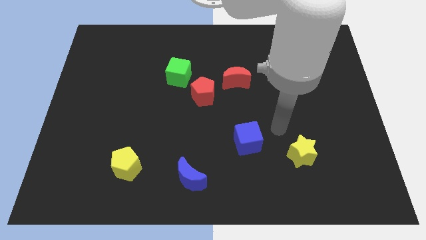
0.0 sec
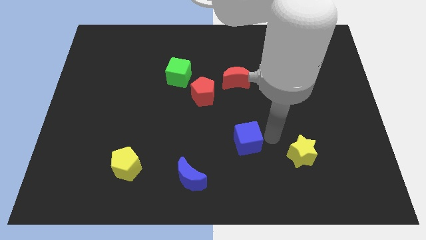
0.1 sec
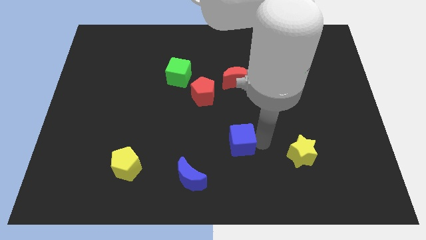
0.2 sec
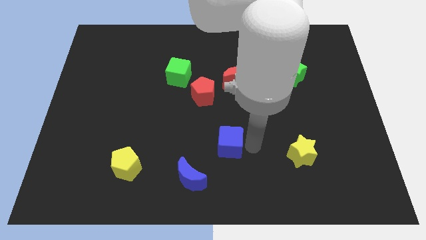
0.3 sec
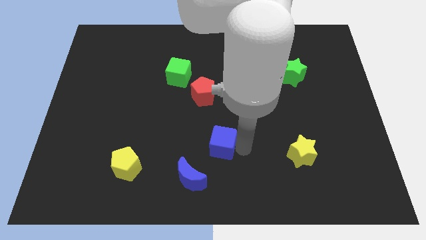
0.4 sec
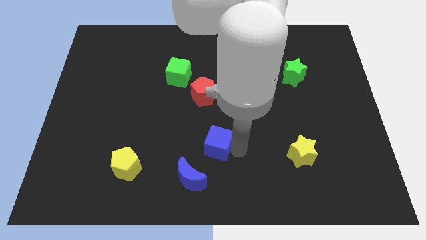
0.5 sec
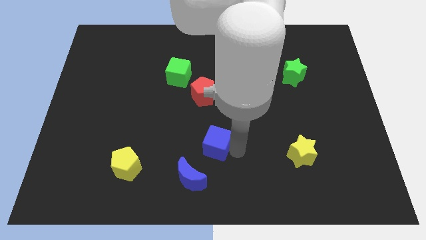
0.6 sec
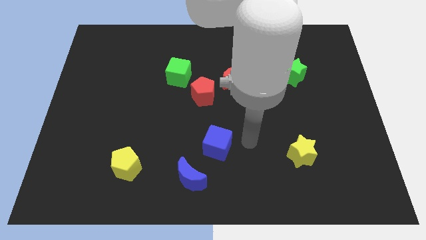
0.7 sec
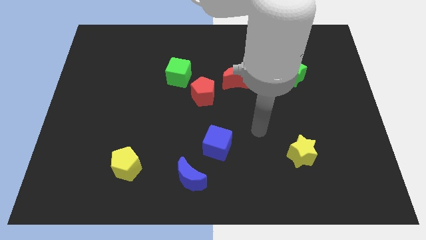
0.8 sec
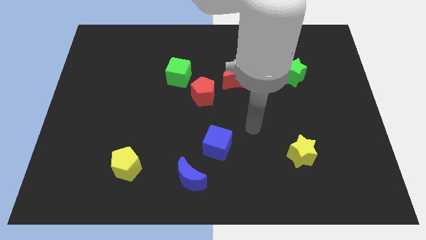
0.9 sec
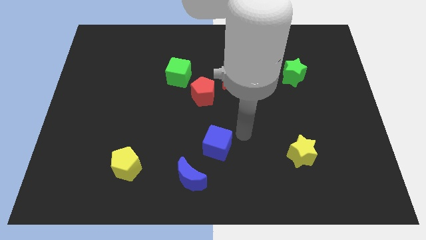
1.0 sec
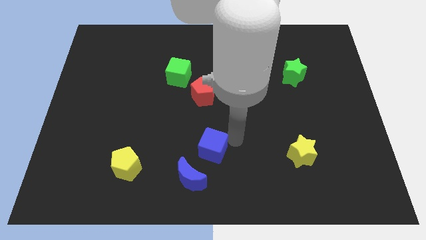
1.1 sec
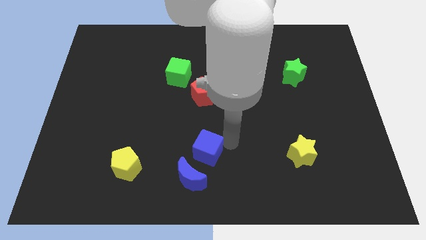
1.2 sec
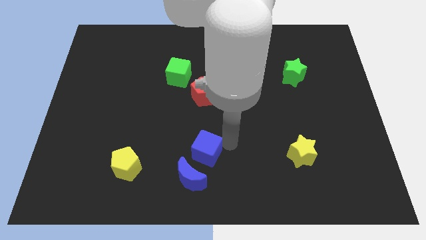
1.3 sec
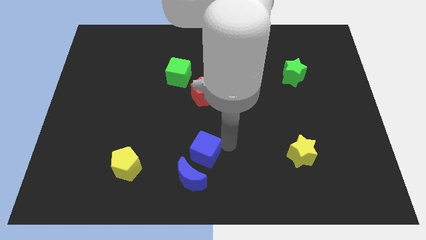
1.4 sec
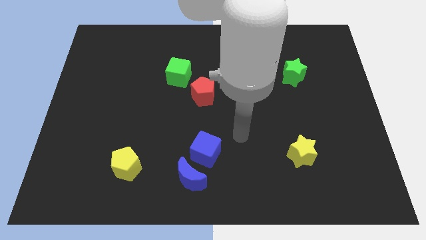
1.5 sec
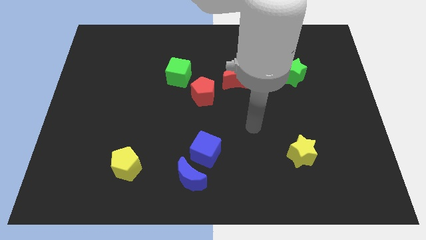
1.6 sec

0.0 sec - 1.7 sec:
put the blue cube below the red pentagon

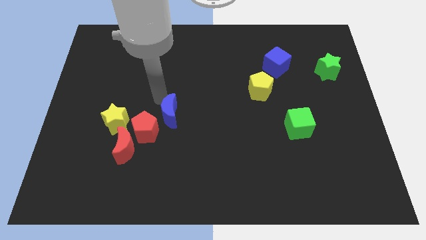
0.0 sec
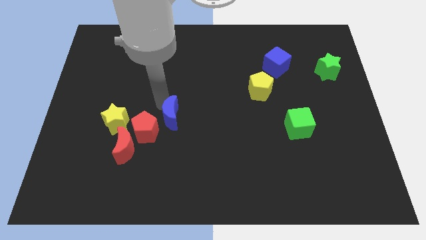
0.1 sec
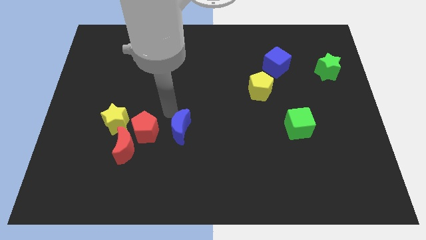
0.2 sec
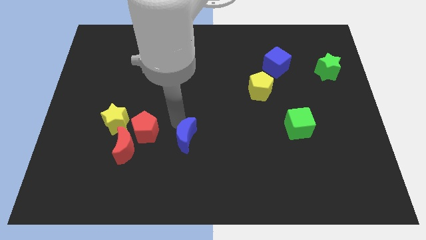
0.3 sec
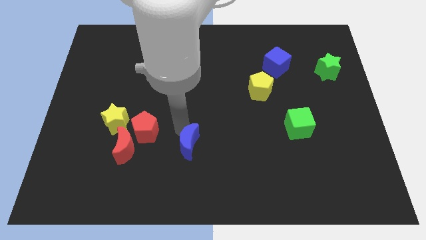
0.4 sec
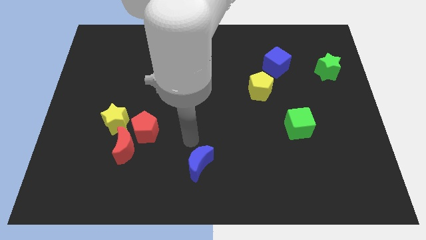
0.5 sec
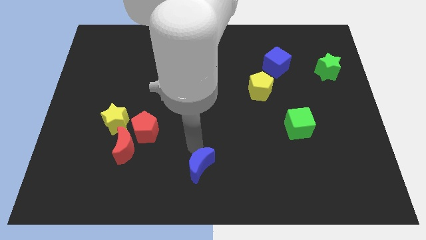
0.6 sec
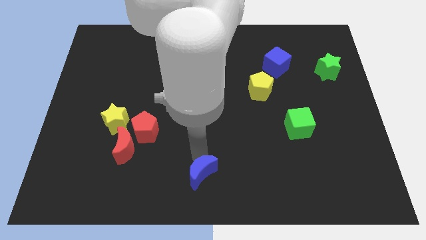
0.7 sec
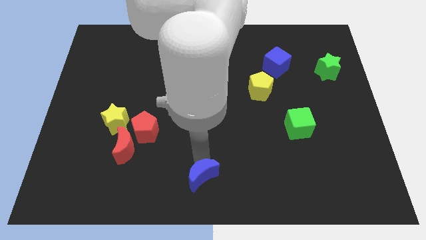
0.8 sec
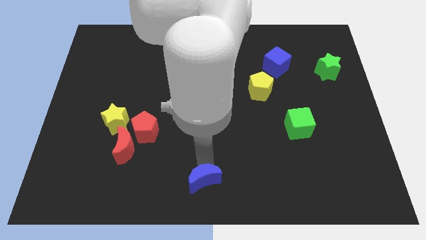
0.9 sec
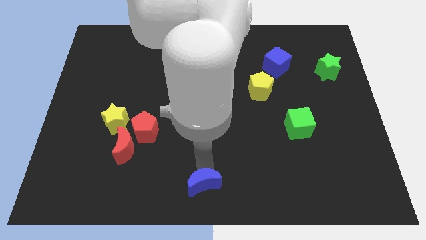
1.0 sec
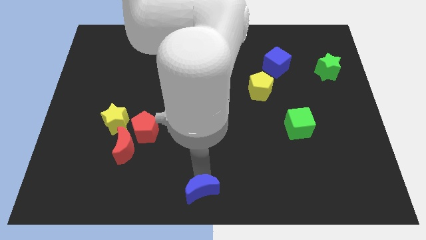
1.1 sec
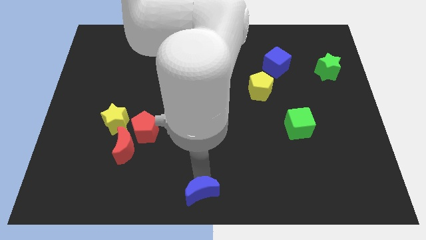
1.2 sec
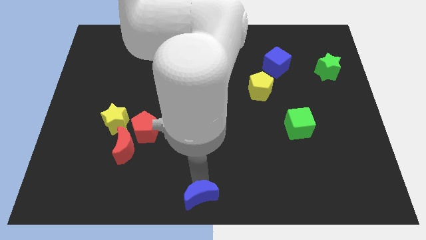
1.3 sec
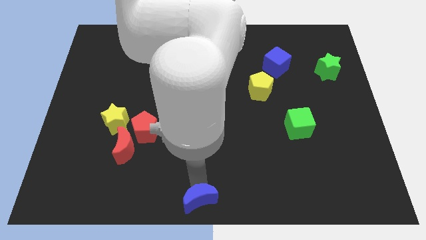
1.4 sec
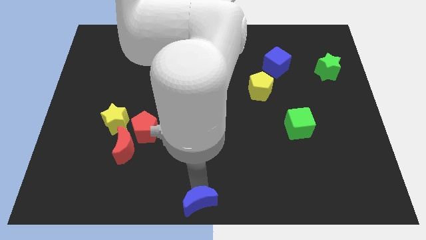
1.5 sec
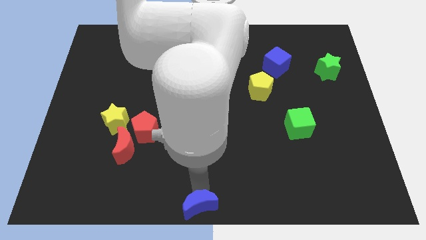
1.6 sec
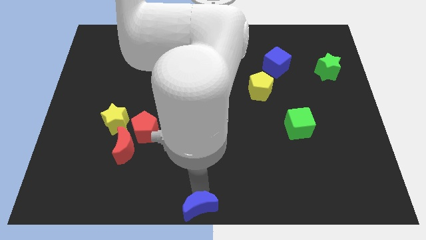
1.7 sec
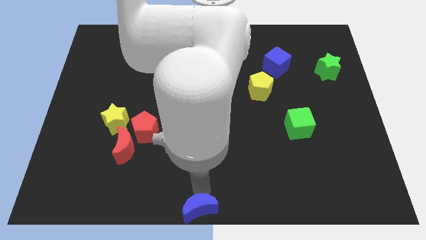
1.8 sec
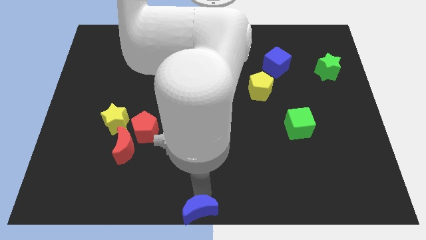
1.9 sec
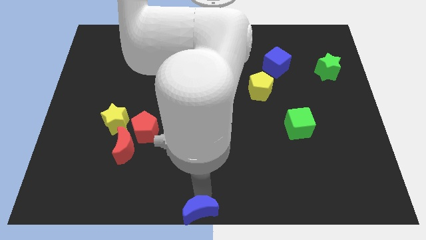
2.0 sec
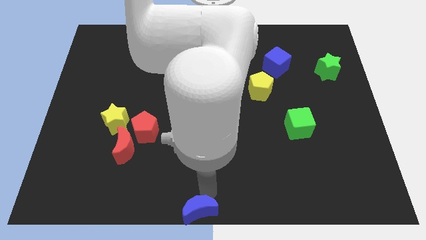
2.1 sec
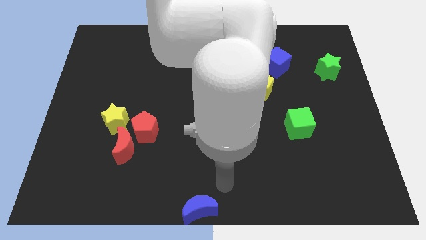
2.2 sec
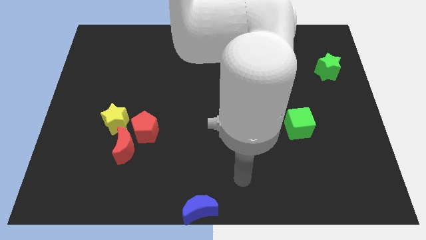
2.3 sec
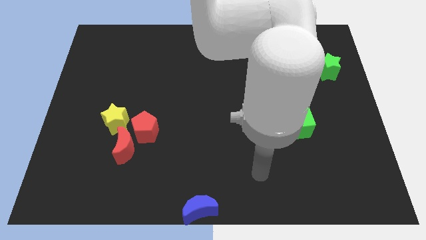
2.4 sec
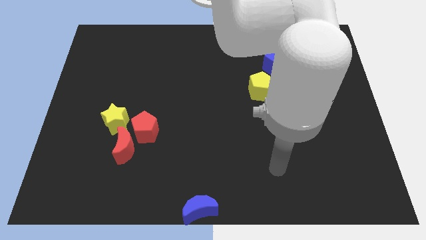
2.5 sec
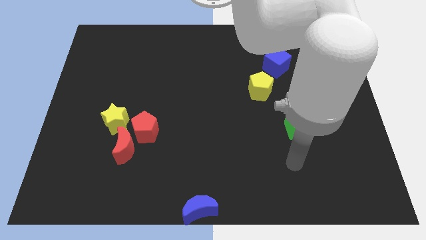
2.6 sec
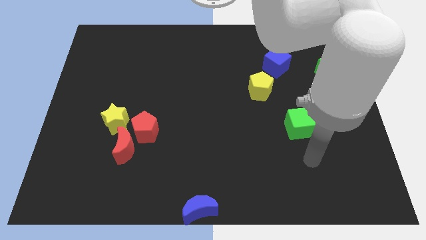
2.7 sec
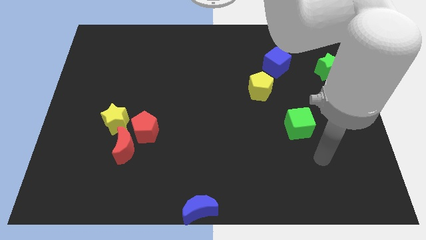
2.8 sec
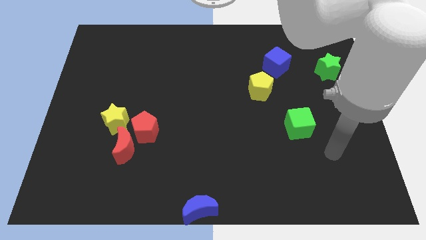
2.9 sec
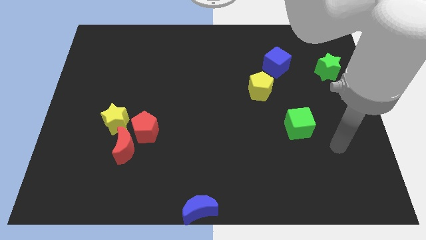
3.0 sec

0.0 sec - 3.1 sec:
push blue moon to the bottom center

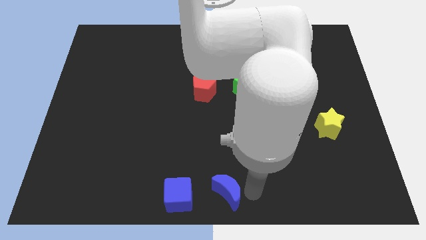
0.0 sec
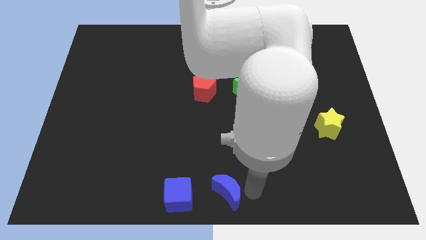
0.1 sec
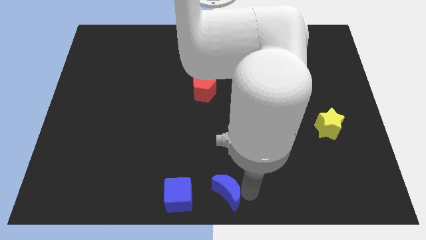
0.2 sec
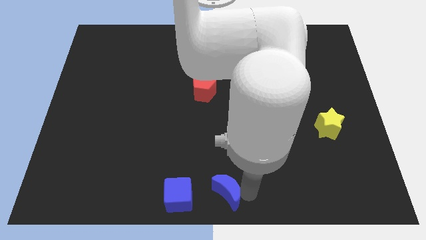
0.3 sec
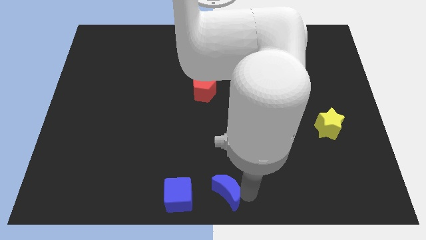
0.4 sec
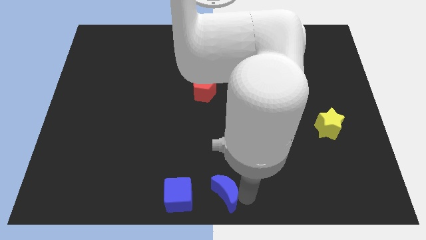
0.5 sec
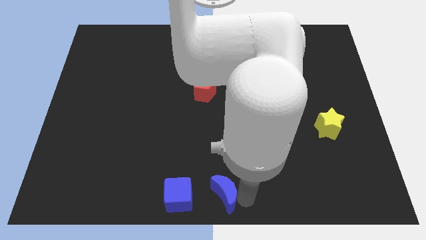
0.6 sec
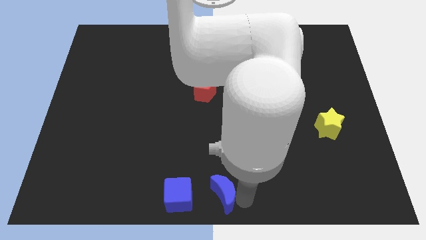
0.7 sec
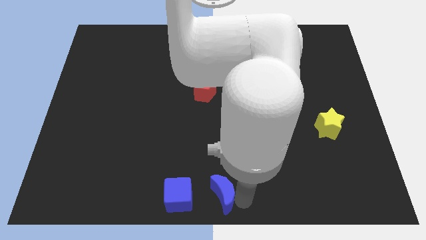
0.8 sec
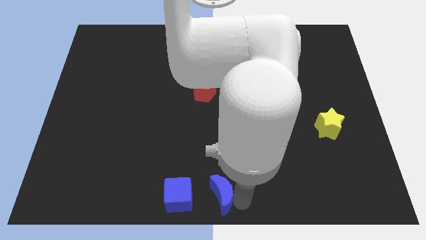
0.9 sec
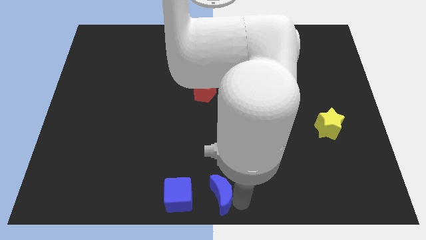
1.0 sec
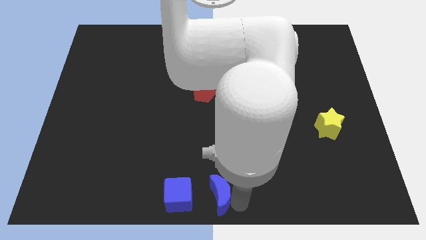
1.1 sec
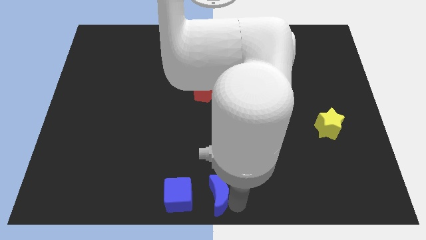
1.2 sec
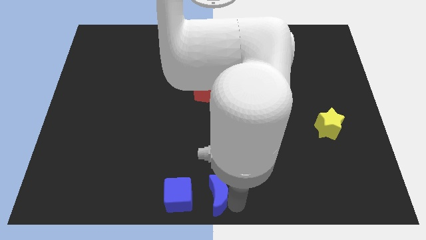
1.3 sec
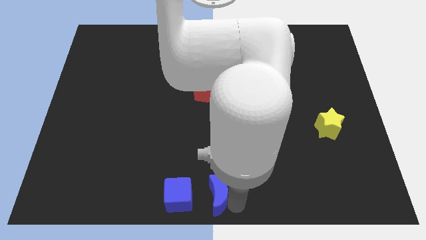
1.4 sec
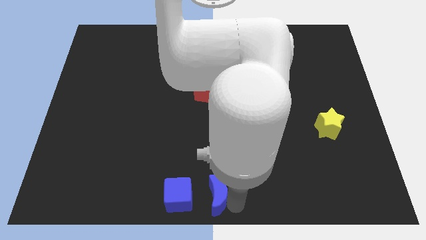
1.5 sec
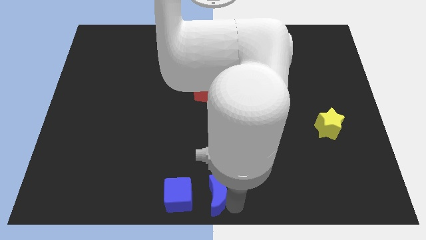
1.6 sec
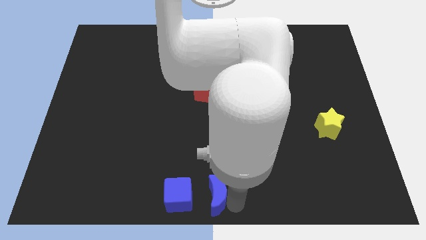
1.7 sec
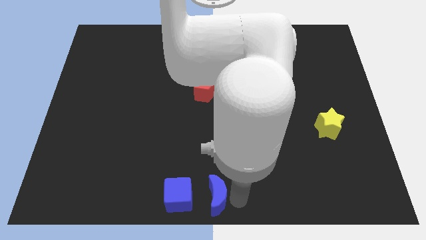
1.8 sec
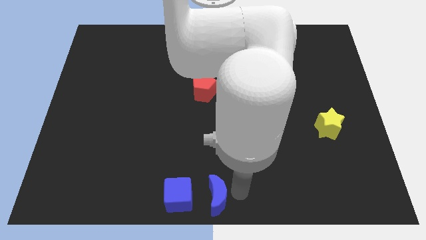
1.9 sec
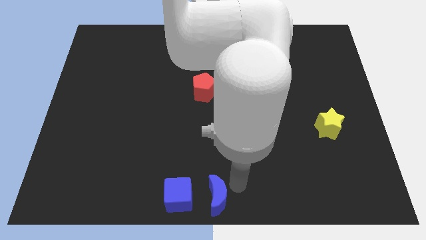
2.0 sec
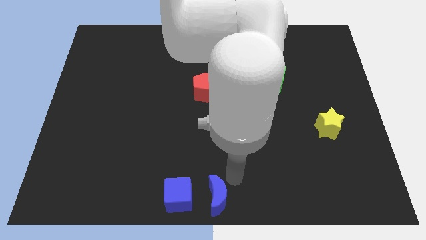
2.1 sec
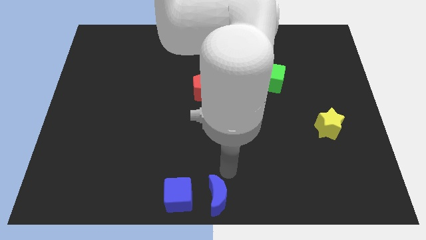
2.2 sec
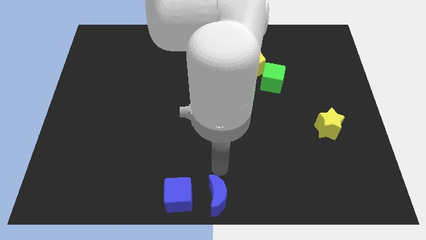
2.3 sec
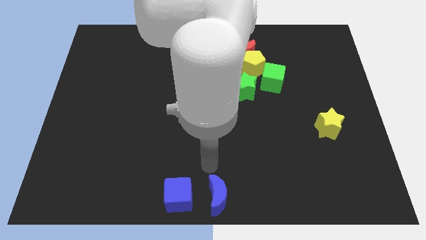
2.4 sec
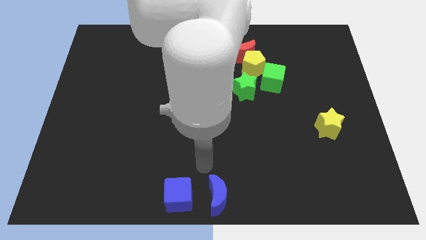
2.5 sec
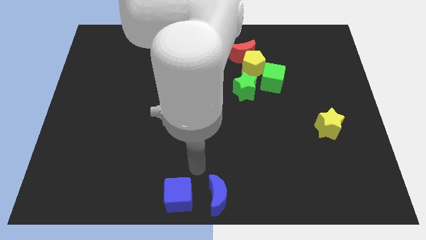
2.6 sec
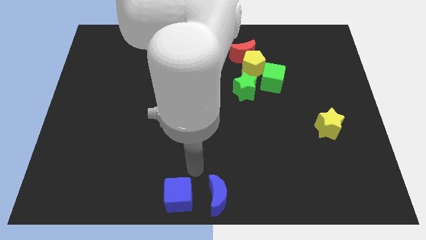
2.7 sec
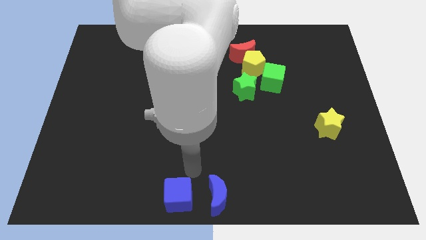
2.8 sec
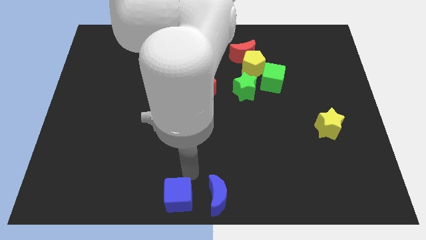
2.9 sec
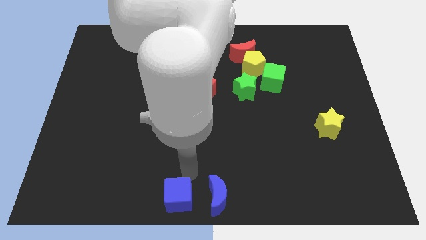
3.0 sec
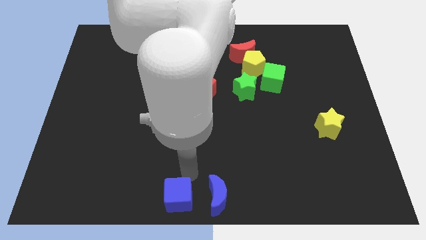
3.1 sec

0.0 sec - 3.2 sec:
adjust the blue moon slightly to the left

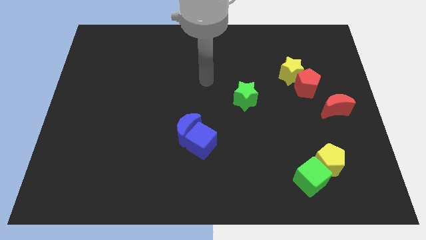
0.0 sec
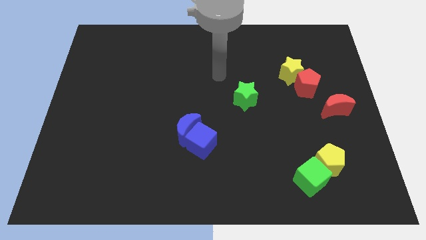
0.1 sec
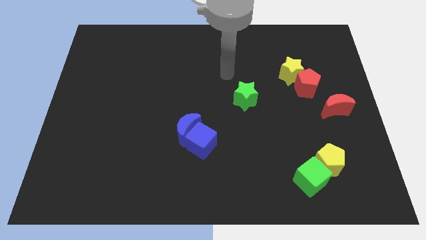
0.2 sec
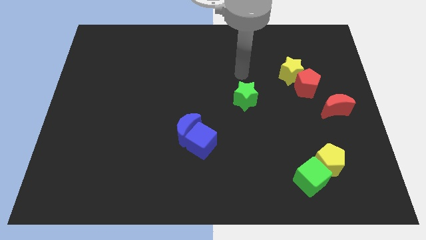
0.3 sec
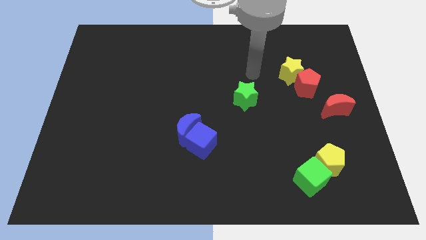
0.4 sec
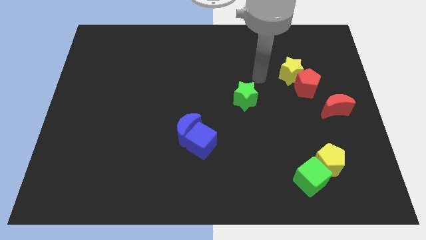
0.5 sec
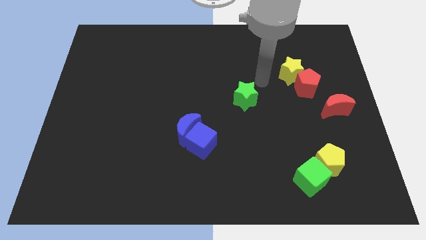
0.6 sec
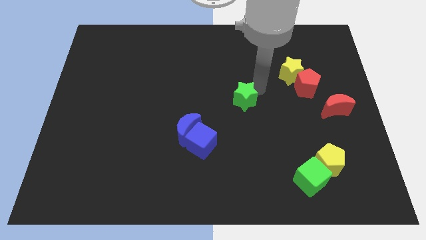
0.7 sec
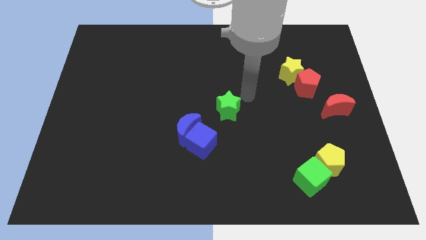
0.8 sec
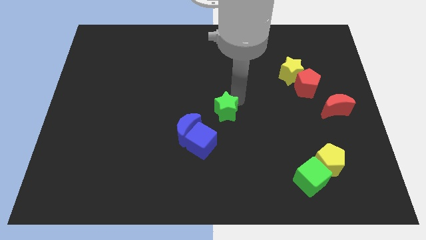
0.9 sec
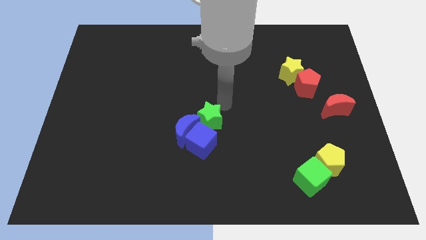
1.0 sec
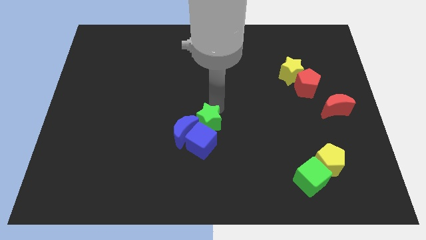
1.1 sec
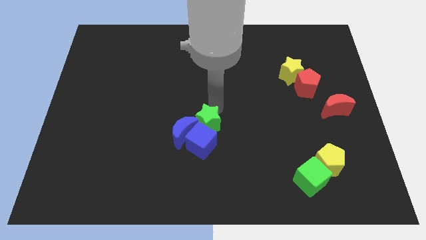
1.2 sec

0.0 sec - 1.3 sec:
push the green star into the blue blocks
